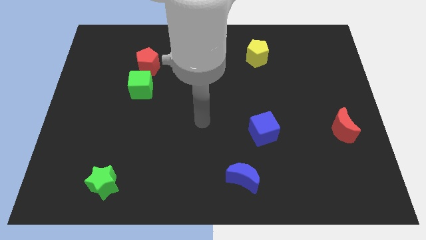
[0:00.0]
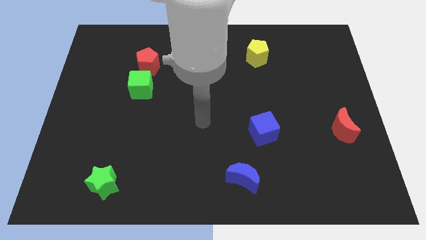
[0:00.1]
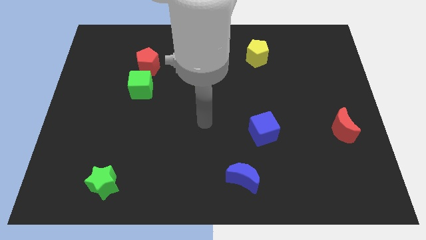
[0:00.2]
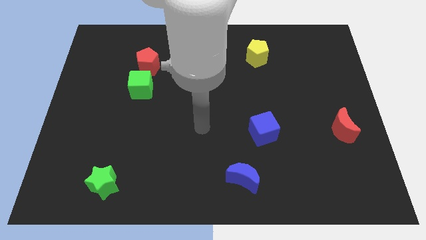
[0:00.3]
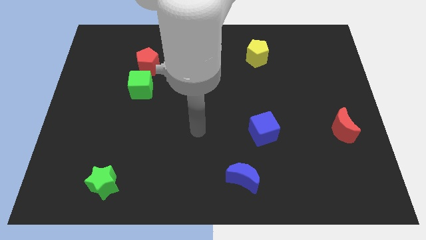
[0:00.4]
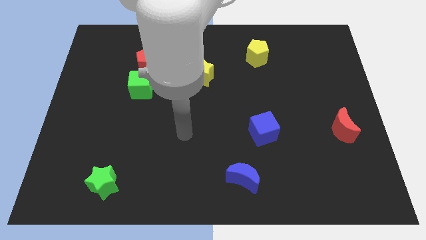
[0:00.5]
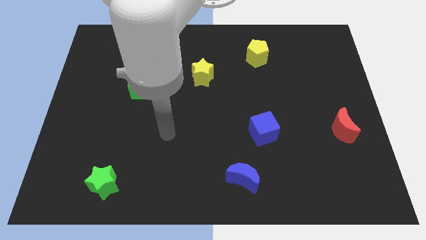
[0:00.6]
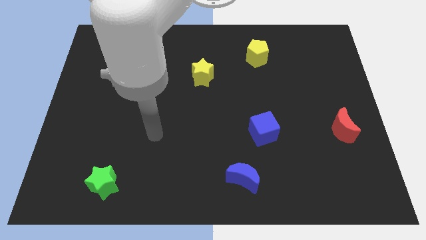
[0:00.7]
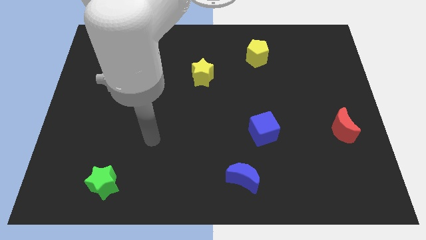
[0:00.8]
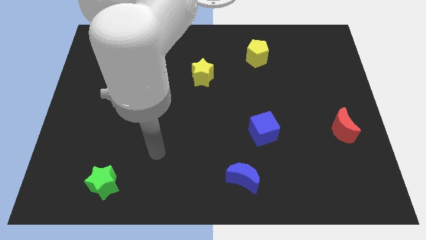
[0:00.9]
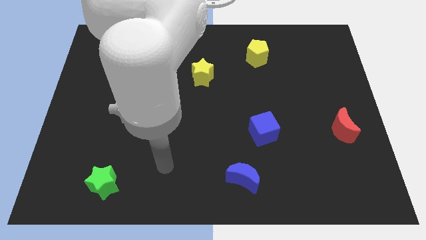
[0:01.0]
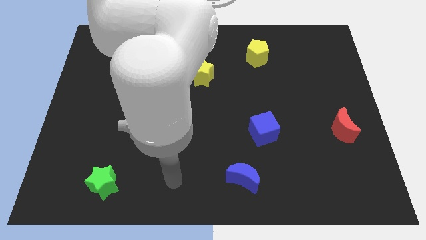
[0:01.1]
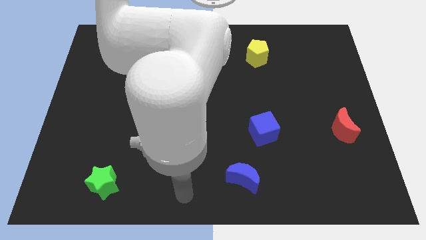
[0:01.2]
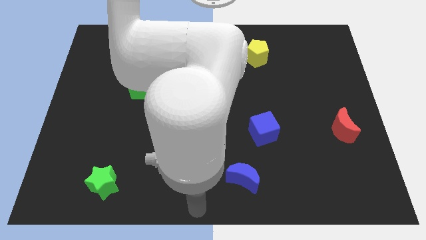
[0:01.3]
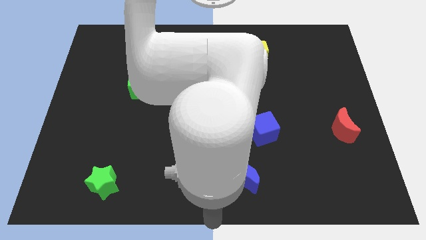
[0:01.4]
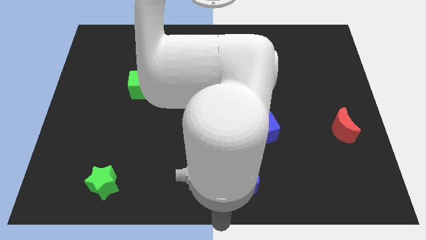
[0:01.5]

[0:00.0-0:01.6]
point your arm at the bottom center of the board

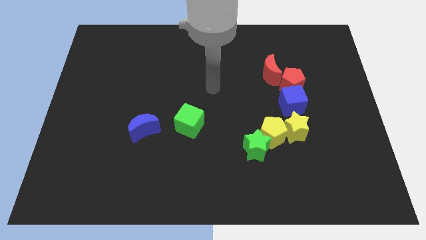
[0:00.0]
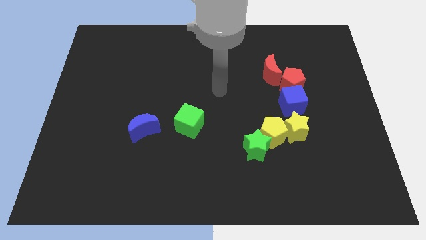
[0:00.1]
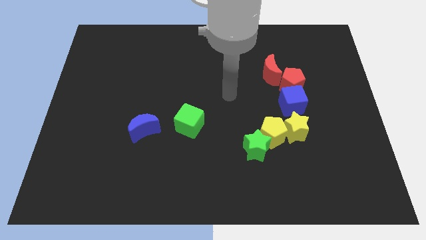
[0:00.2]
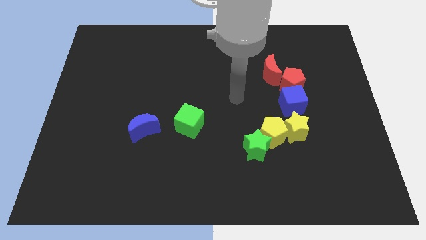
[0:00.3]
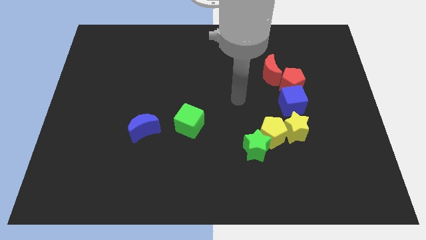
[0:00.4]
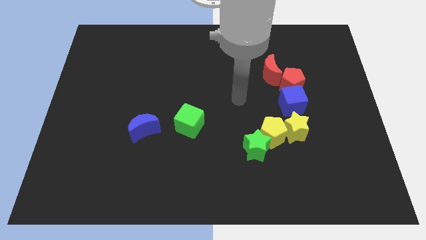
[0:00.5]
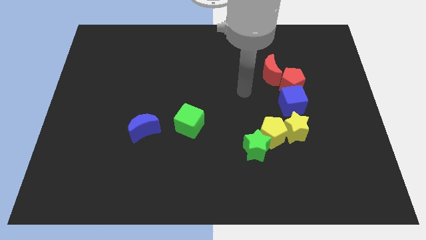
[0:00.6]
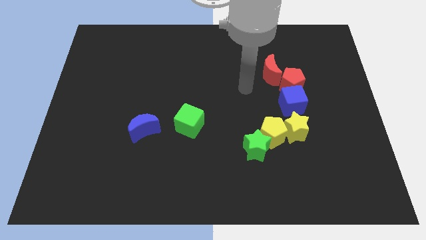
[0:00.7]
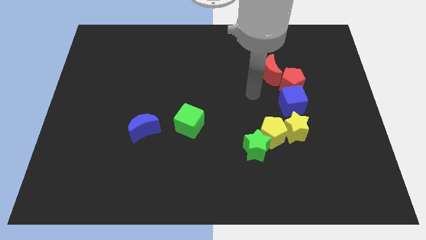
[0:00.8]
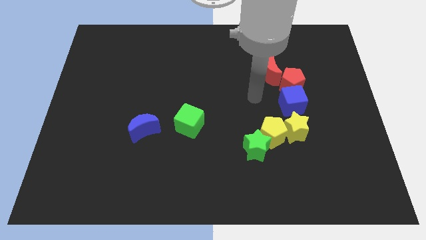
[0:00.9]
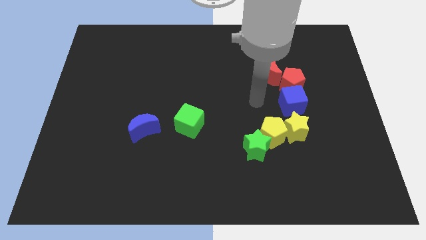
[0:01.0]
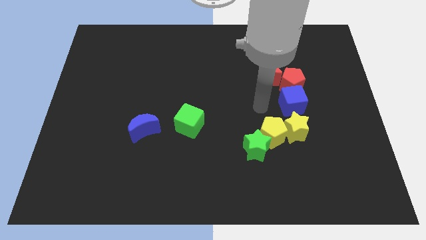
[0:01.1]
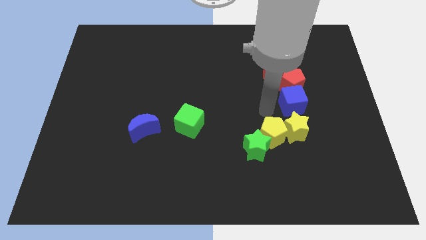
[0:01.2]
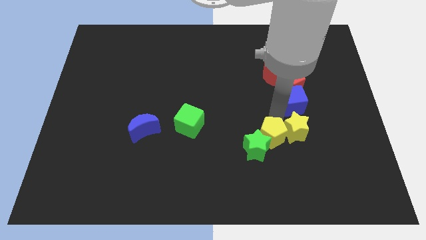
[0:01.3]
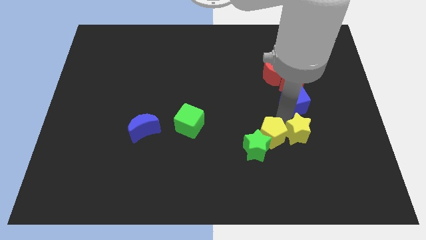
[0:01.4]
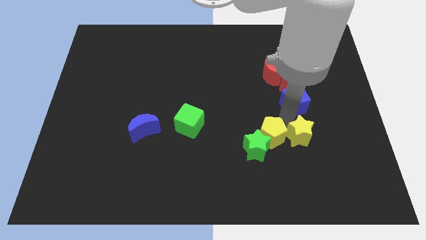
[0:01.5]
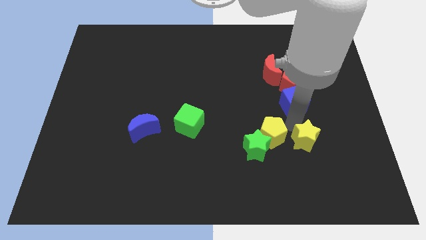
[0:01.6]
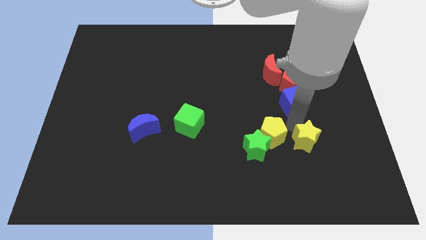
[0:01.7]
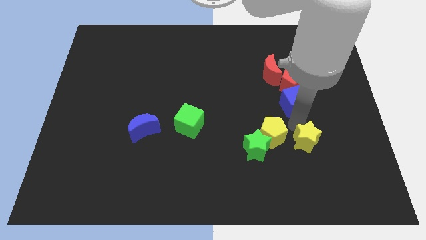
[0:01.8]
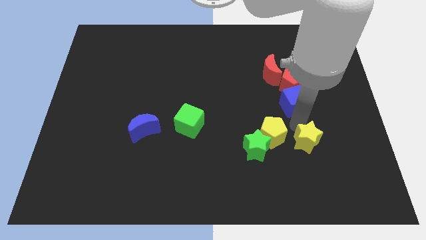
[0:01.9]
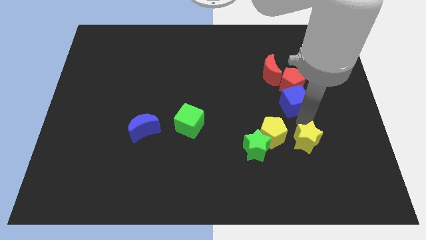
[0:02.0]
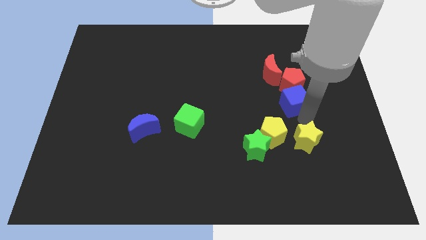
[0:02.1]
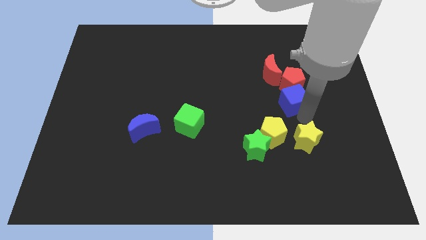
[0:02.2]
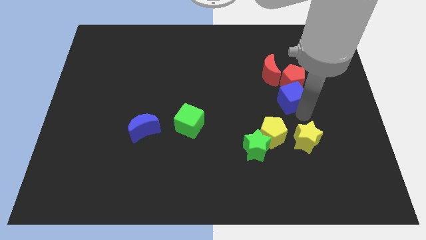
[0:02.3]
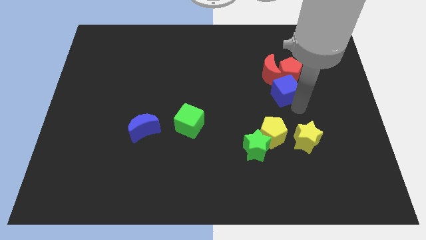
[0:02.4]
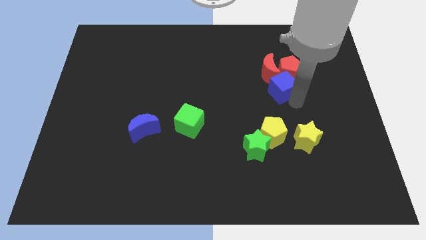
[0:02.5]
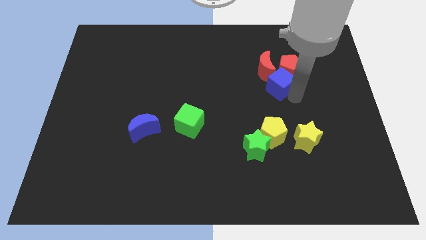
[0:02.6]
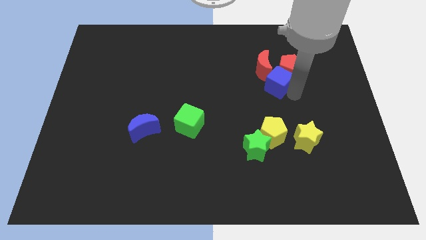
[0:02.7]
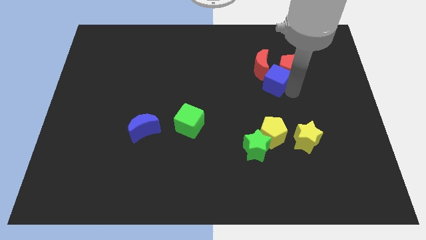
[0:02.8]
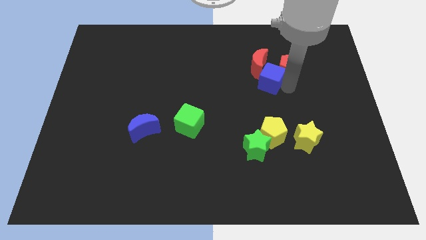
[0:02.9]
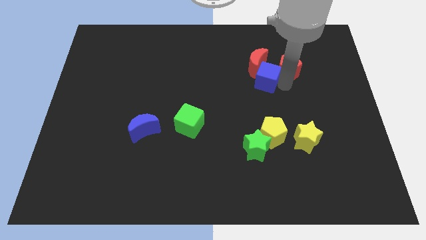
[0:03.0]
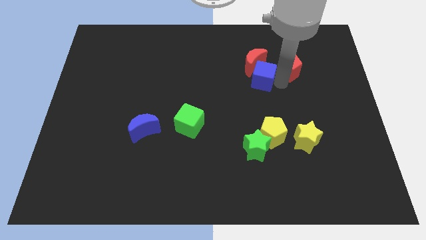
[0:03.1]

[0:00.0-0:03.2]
push the blue cube into the red moon

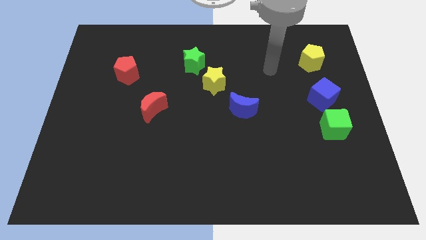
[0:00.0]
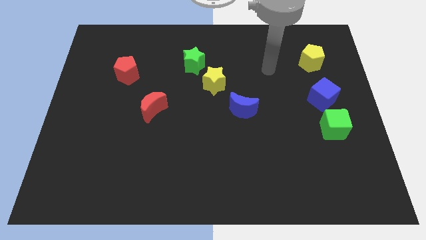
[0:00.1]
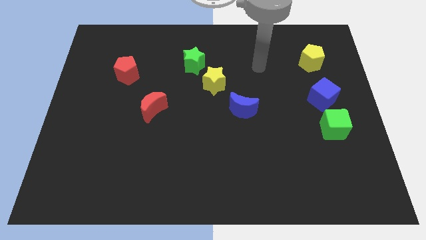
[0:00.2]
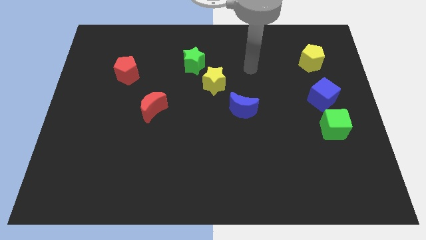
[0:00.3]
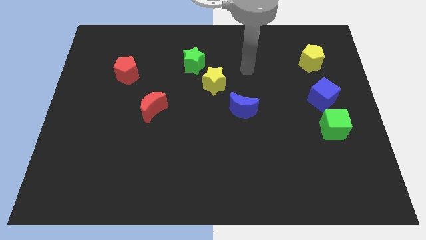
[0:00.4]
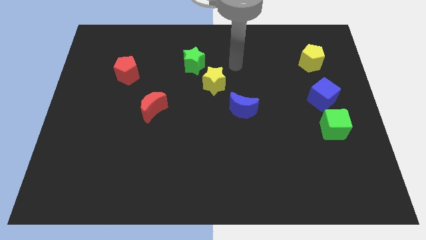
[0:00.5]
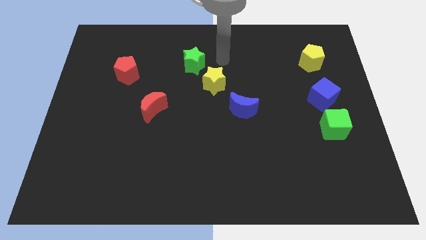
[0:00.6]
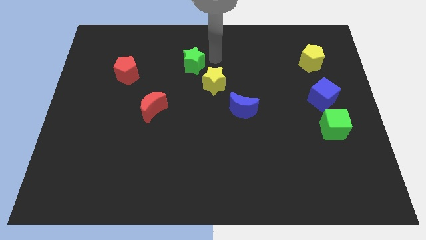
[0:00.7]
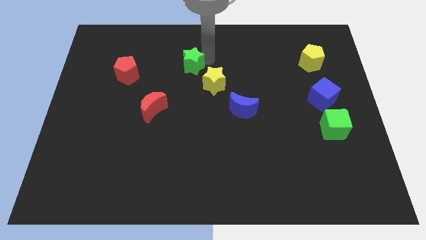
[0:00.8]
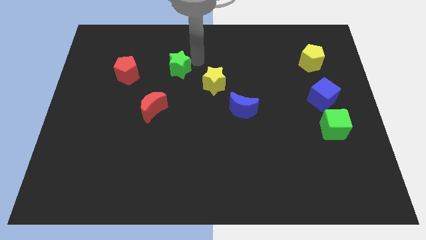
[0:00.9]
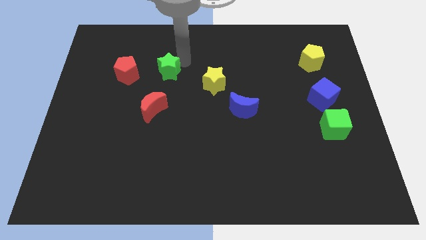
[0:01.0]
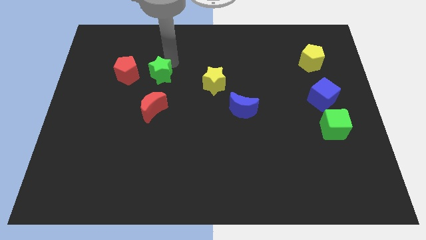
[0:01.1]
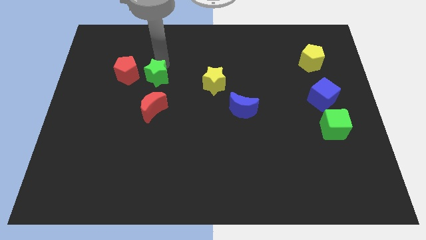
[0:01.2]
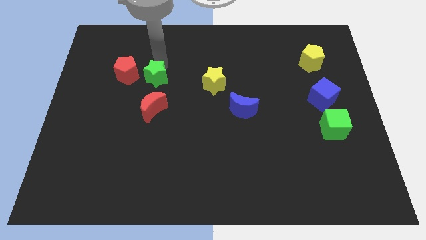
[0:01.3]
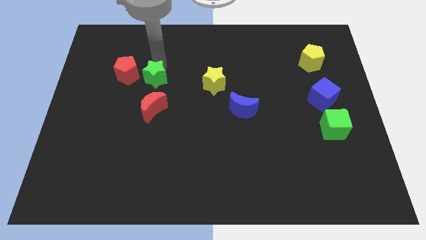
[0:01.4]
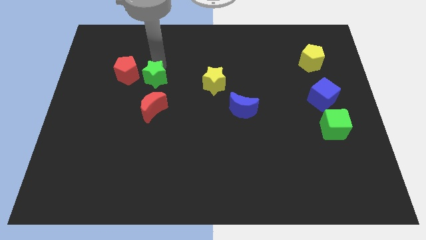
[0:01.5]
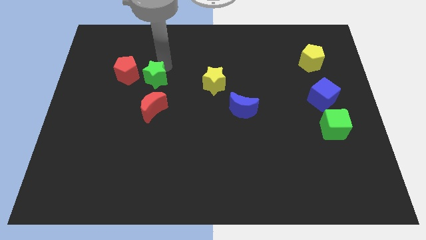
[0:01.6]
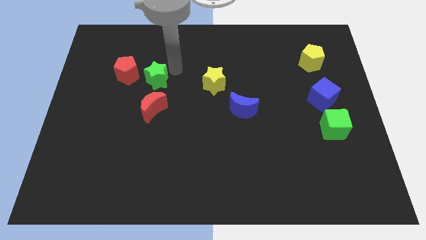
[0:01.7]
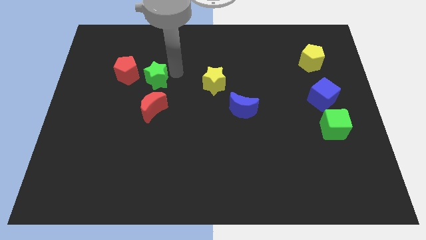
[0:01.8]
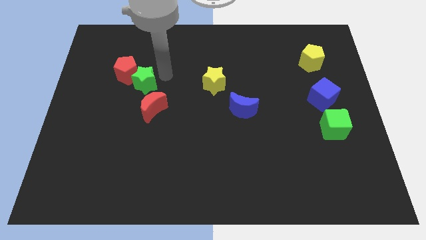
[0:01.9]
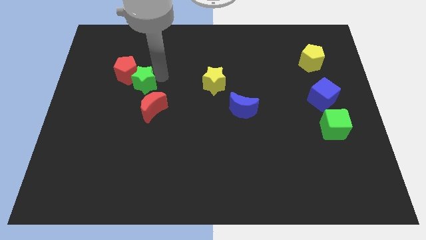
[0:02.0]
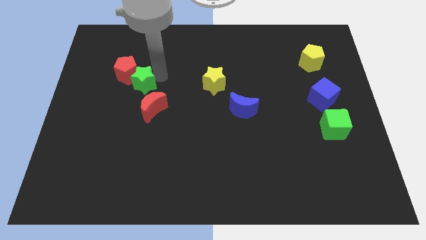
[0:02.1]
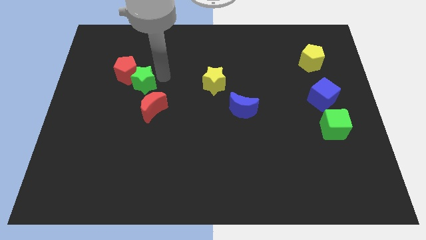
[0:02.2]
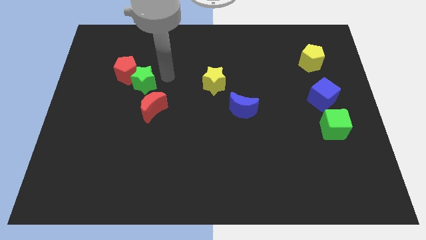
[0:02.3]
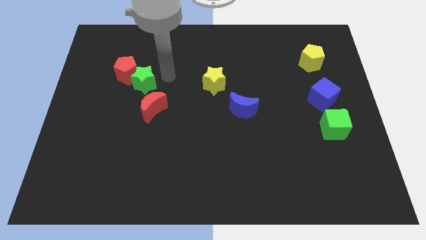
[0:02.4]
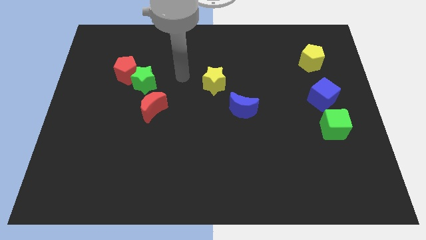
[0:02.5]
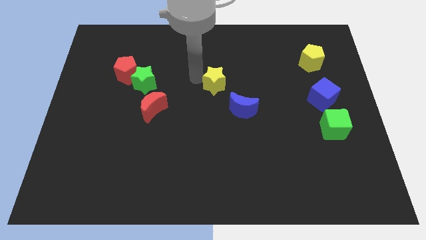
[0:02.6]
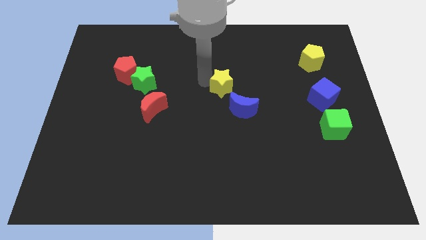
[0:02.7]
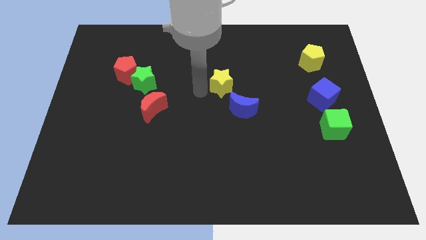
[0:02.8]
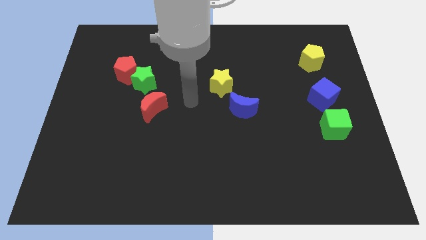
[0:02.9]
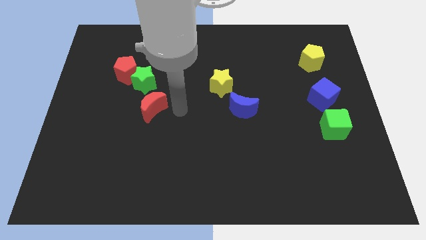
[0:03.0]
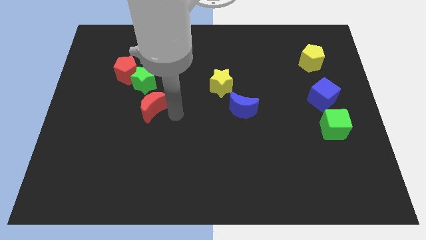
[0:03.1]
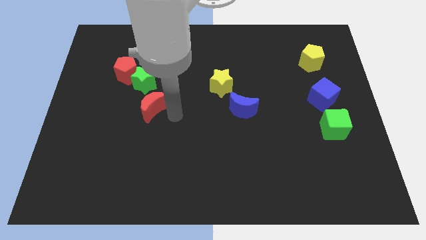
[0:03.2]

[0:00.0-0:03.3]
move green star in between the red blocks

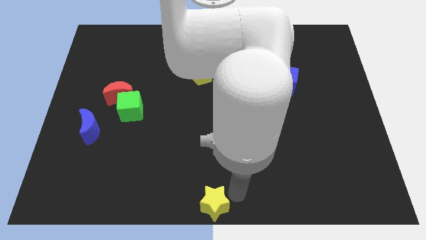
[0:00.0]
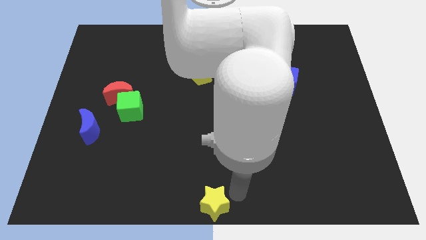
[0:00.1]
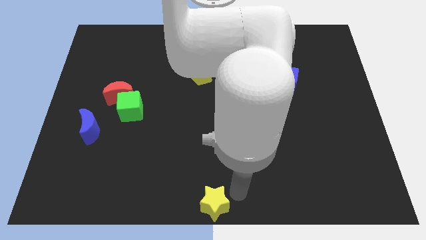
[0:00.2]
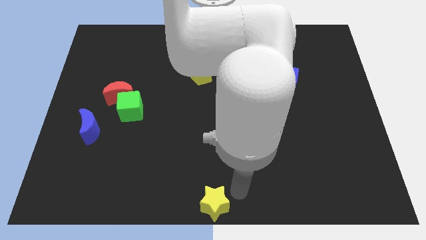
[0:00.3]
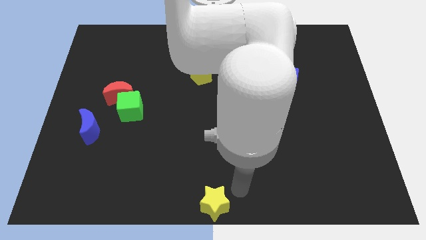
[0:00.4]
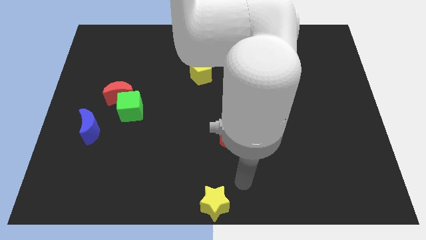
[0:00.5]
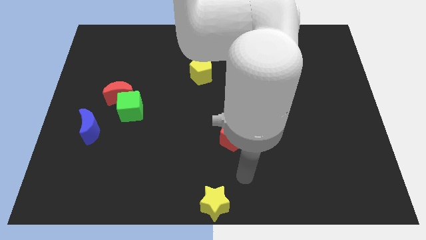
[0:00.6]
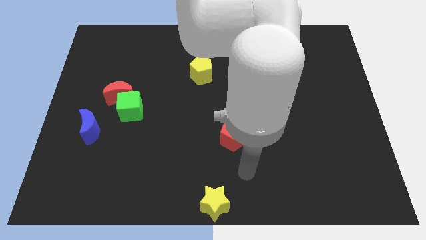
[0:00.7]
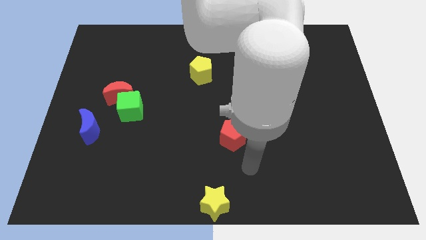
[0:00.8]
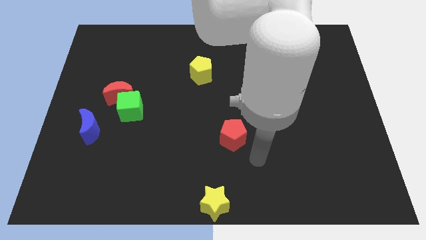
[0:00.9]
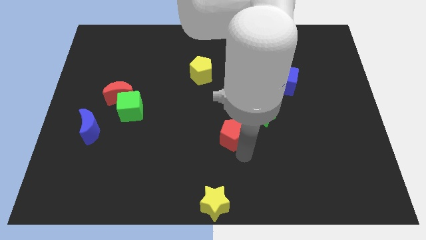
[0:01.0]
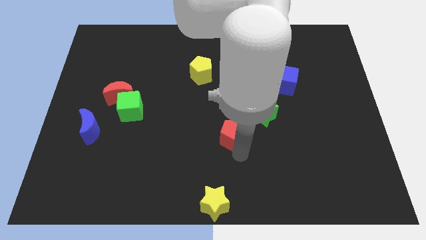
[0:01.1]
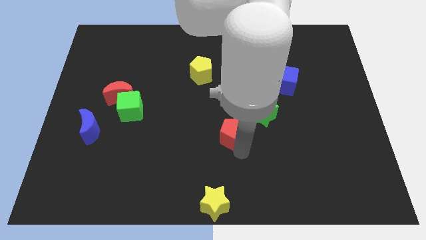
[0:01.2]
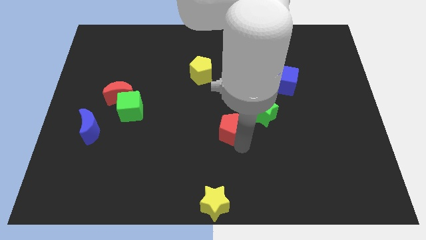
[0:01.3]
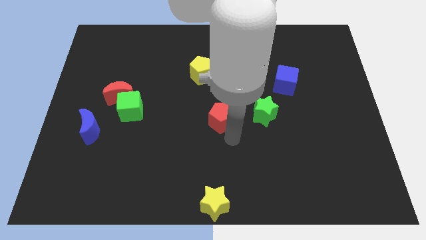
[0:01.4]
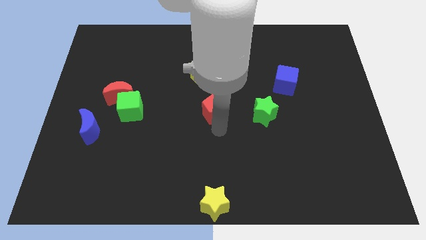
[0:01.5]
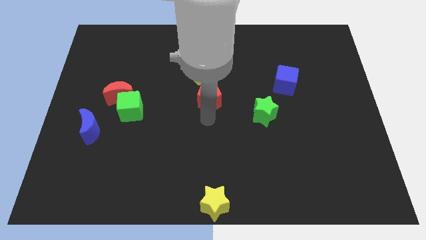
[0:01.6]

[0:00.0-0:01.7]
move the red pentagon parallel to the green star
